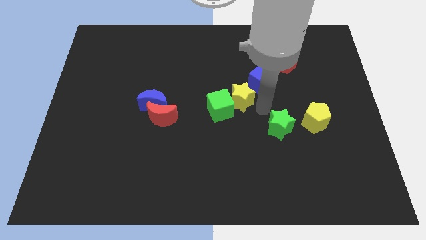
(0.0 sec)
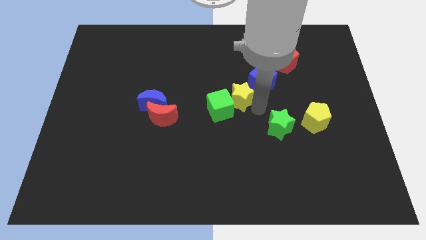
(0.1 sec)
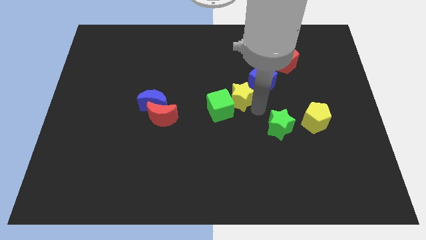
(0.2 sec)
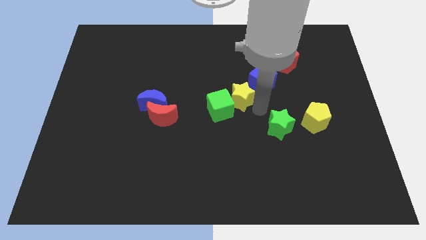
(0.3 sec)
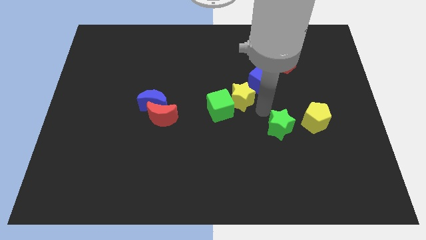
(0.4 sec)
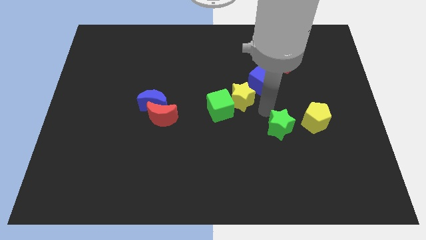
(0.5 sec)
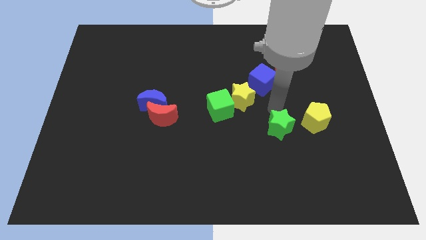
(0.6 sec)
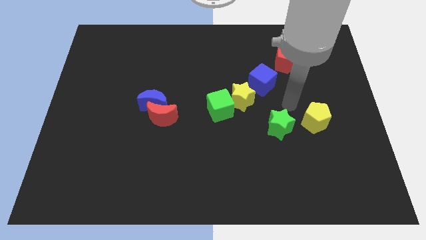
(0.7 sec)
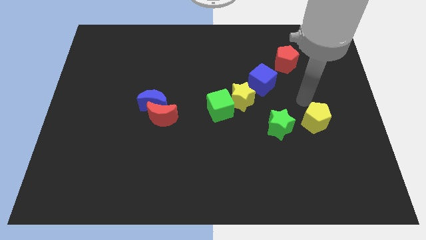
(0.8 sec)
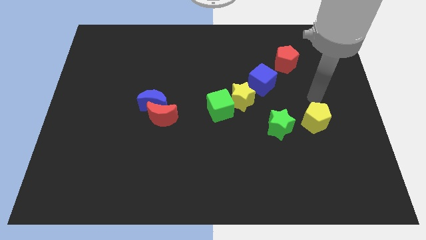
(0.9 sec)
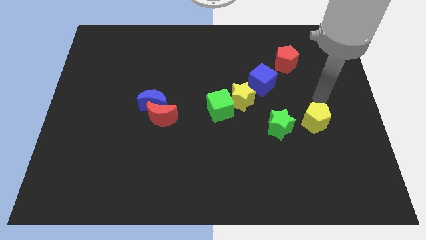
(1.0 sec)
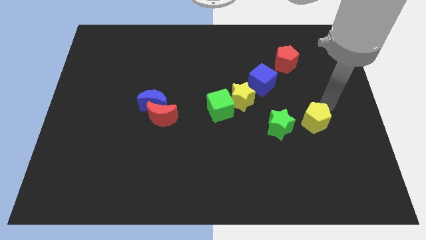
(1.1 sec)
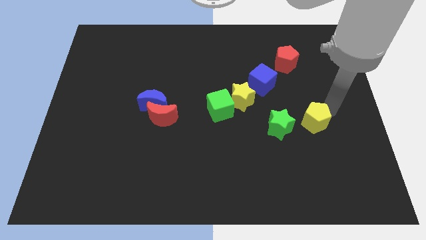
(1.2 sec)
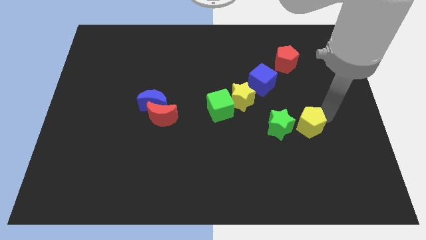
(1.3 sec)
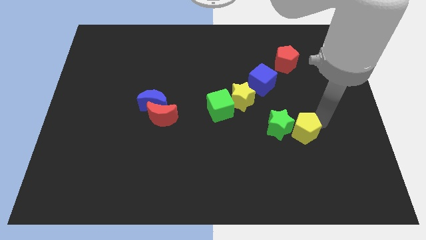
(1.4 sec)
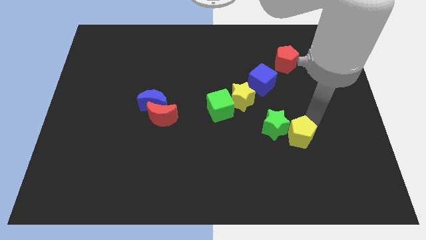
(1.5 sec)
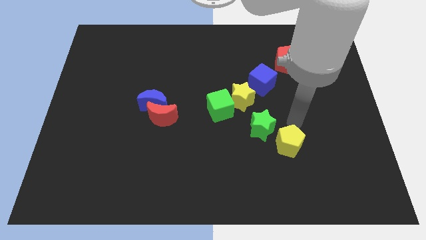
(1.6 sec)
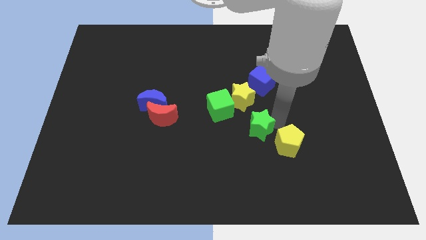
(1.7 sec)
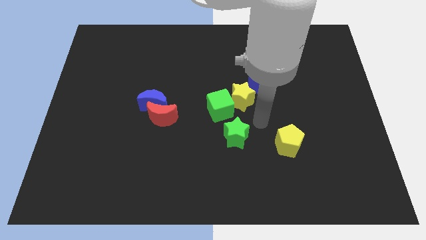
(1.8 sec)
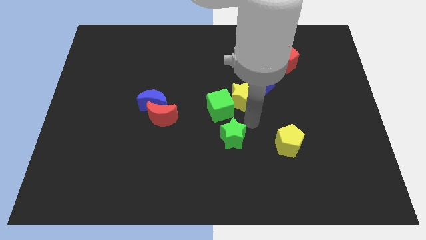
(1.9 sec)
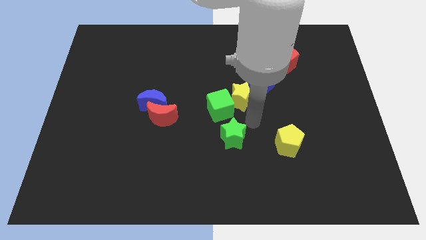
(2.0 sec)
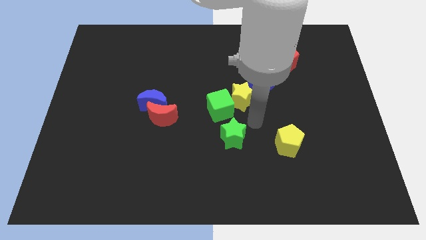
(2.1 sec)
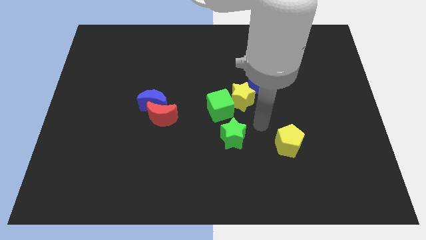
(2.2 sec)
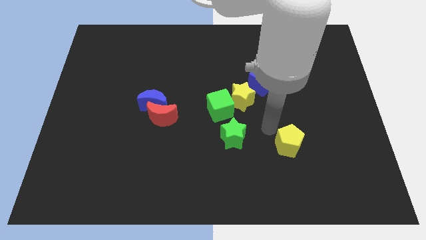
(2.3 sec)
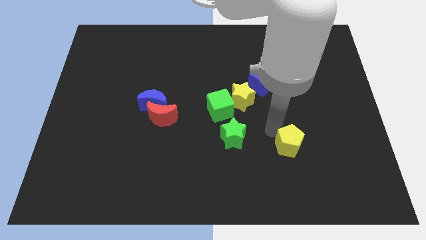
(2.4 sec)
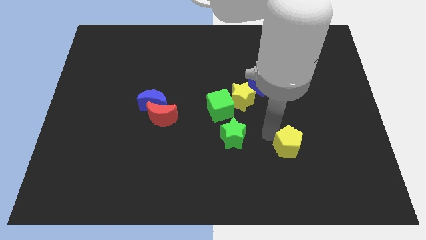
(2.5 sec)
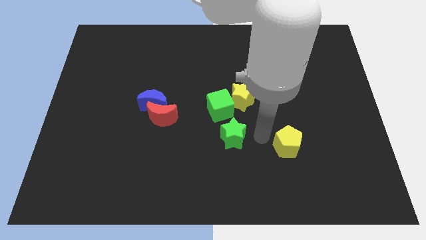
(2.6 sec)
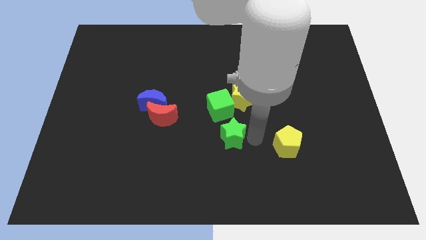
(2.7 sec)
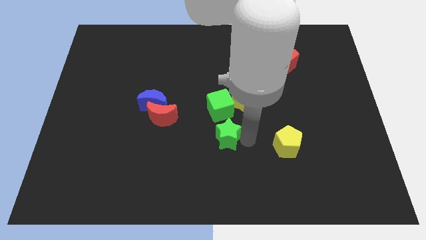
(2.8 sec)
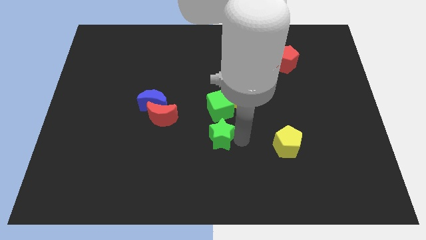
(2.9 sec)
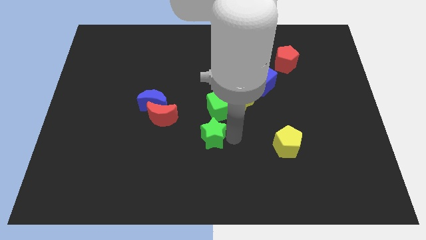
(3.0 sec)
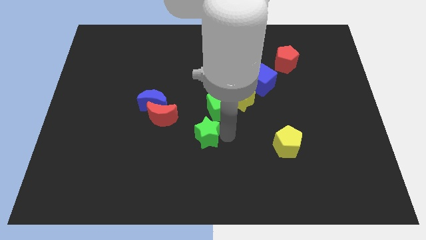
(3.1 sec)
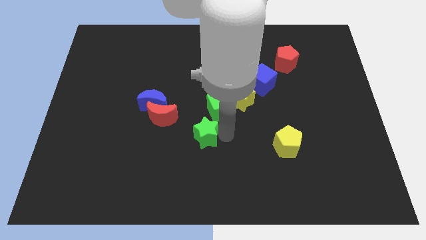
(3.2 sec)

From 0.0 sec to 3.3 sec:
move the green star below the green cube

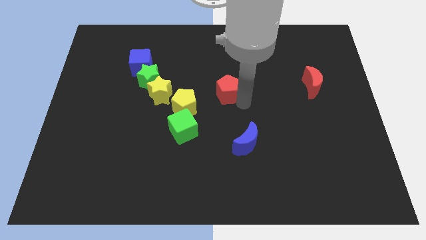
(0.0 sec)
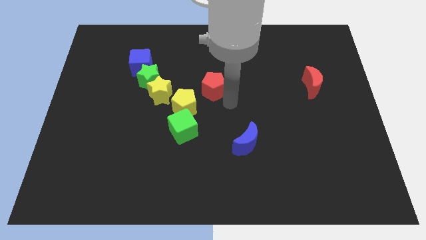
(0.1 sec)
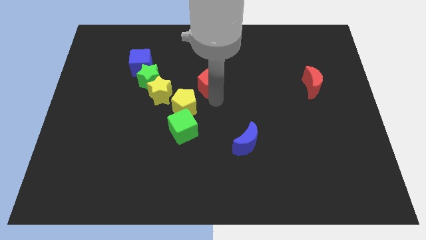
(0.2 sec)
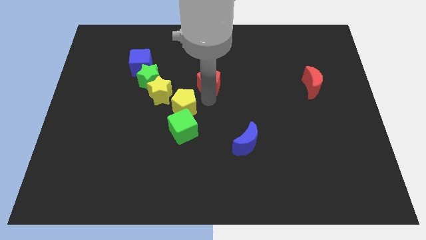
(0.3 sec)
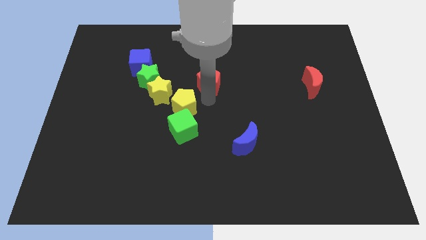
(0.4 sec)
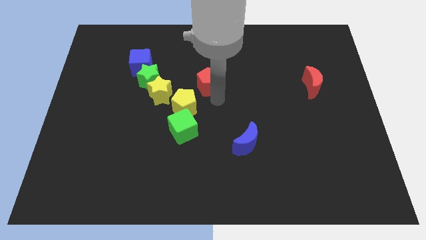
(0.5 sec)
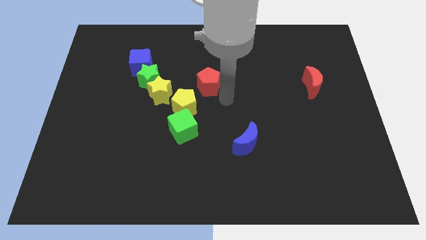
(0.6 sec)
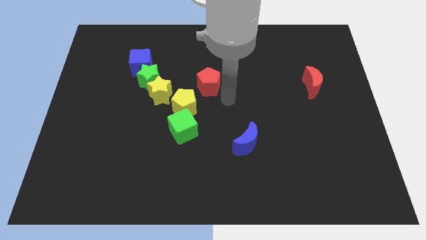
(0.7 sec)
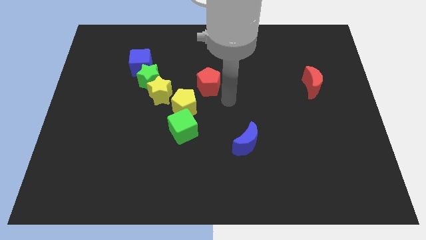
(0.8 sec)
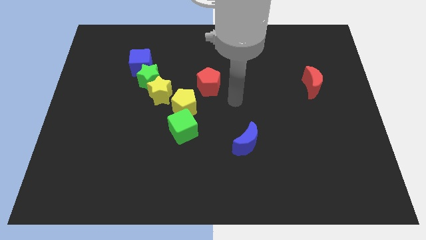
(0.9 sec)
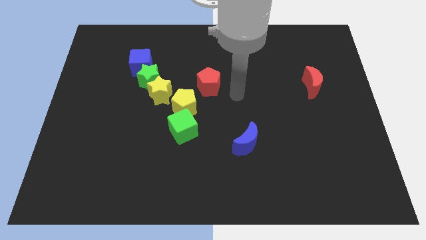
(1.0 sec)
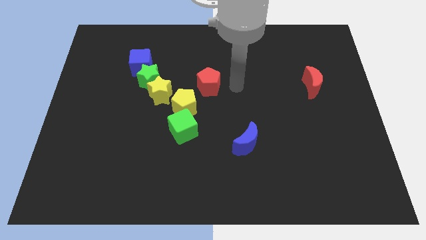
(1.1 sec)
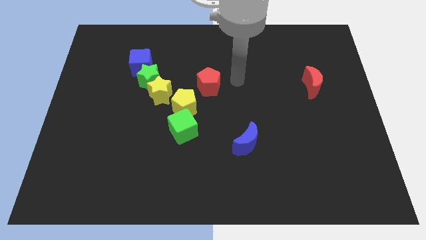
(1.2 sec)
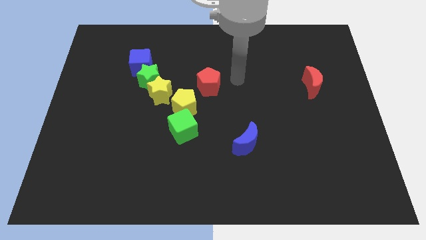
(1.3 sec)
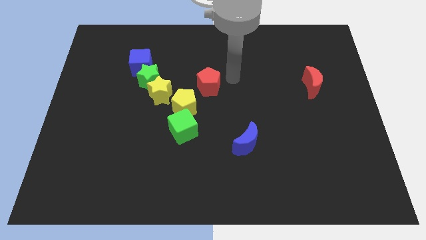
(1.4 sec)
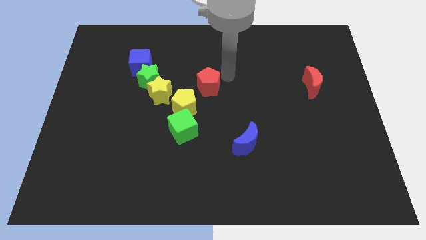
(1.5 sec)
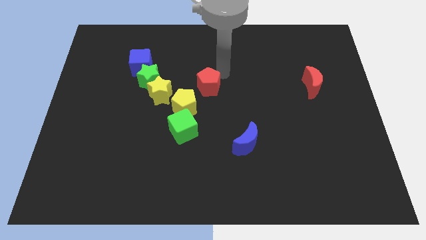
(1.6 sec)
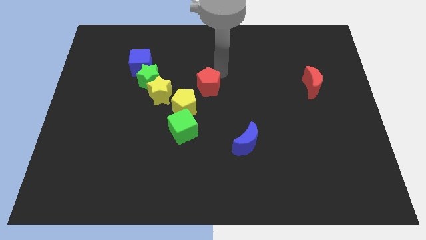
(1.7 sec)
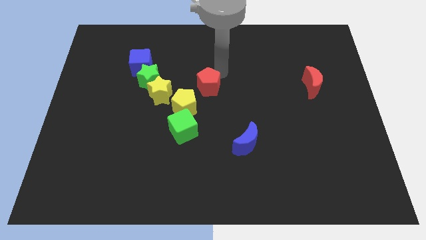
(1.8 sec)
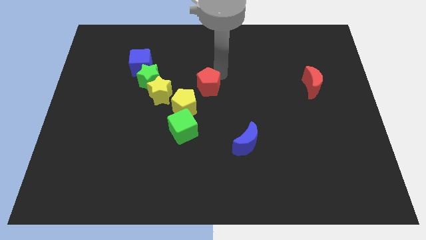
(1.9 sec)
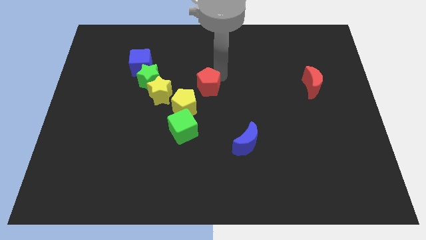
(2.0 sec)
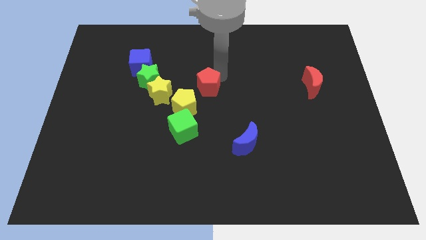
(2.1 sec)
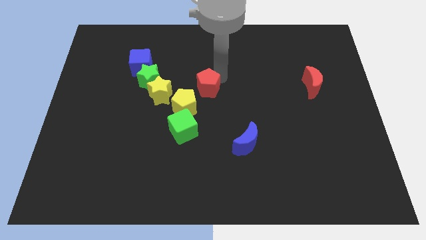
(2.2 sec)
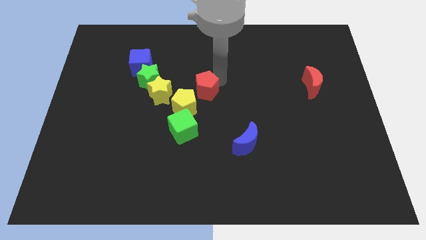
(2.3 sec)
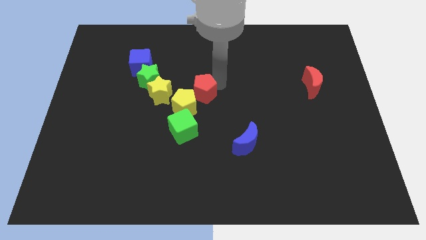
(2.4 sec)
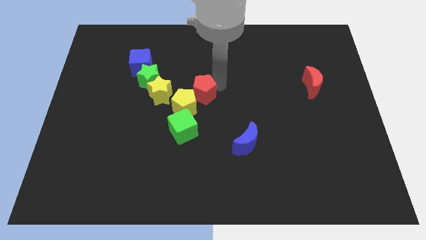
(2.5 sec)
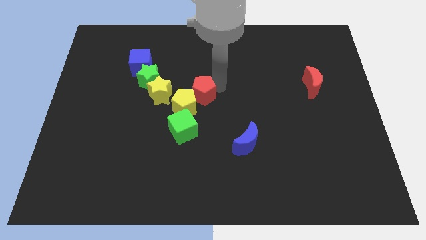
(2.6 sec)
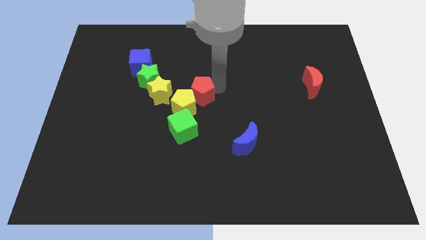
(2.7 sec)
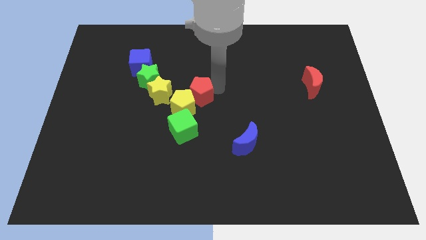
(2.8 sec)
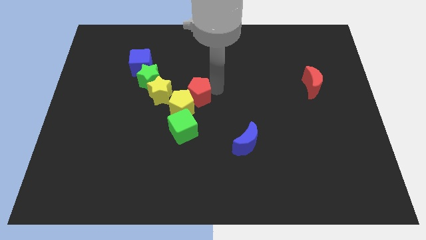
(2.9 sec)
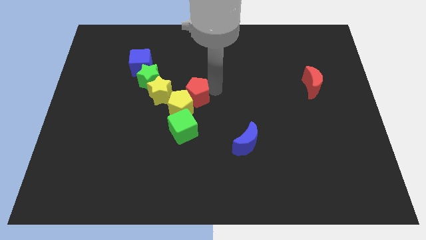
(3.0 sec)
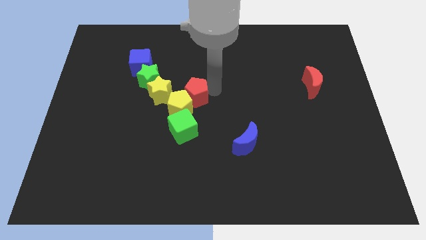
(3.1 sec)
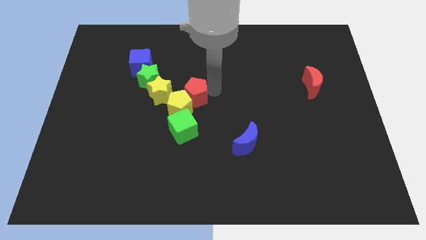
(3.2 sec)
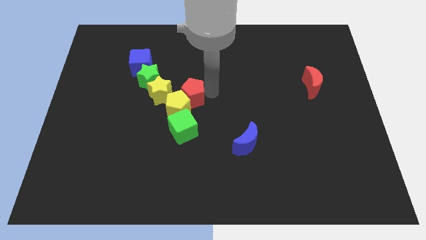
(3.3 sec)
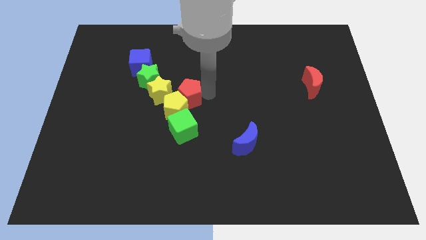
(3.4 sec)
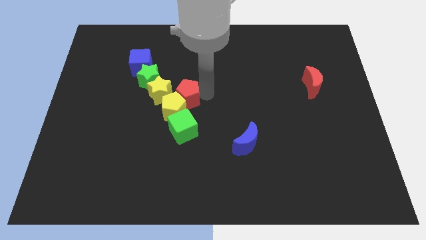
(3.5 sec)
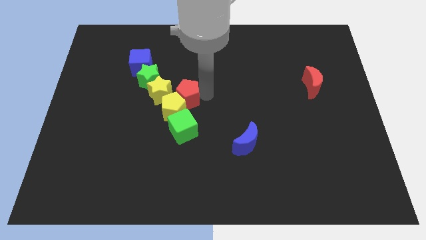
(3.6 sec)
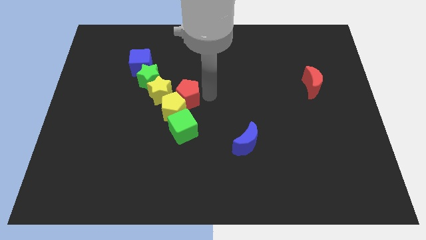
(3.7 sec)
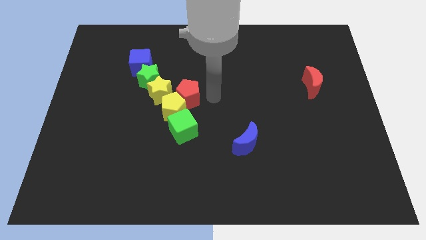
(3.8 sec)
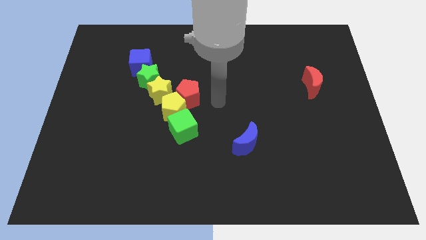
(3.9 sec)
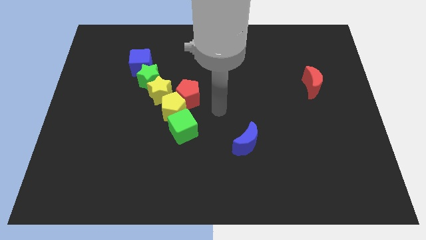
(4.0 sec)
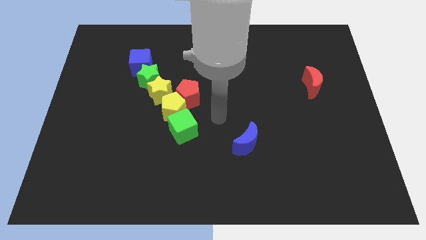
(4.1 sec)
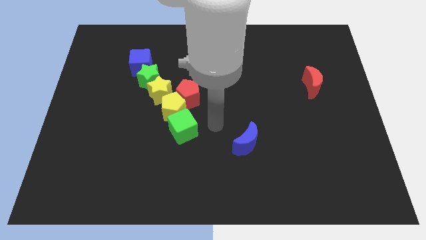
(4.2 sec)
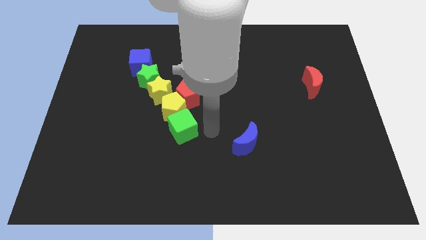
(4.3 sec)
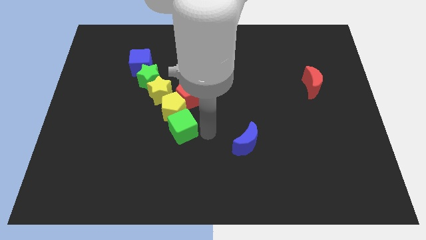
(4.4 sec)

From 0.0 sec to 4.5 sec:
push the red pentagon into the yellow pentagon

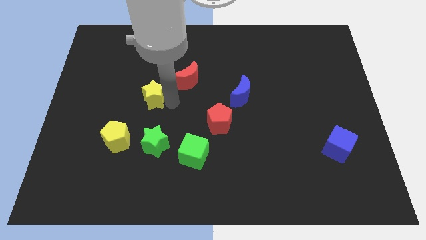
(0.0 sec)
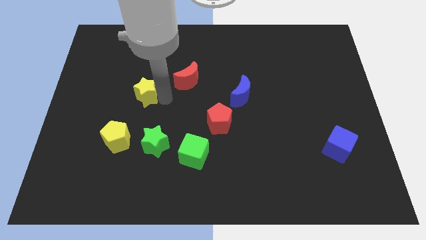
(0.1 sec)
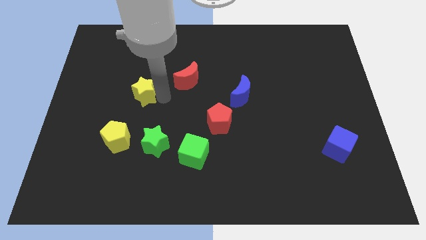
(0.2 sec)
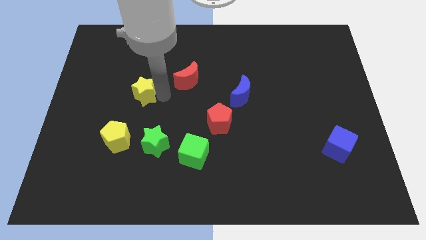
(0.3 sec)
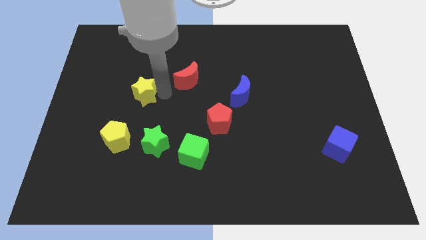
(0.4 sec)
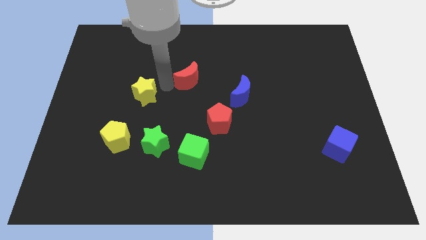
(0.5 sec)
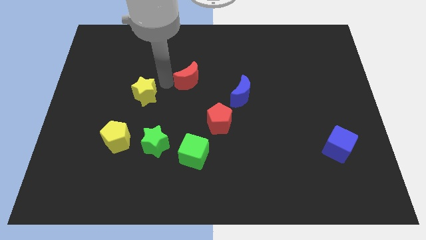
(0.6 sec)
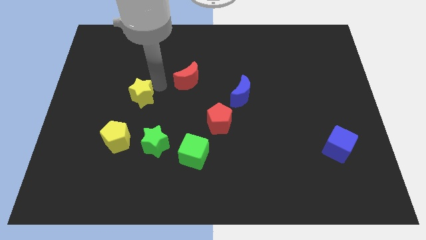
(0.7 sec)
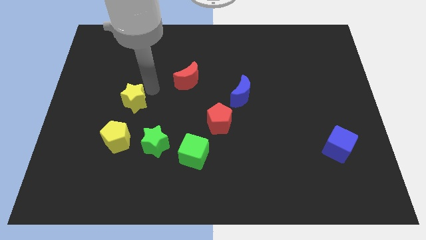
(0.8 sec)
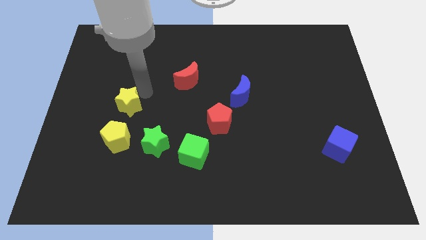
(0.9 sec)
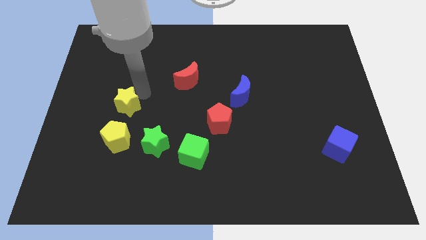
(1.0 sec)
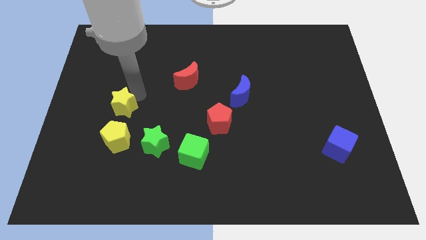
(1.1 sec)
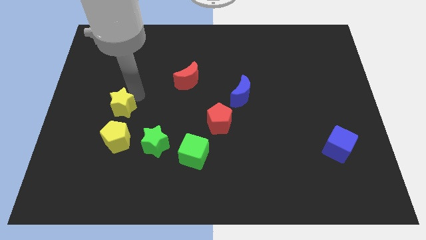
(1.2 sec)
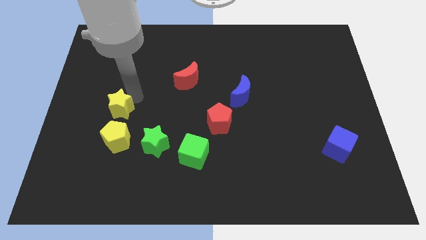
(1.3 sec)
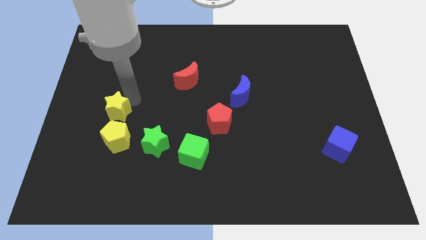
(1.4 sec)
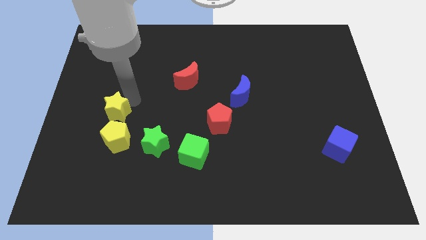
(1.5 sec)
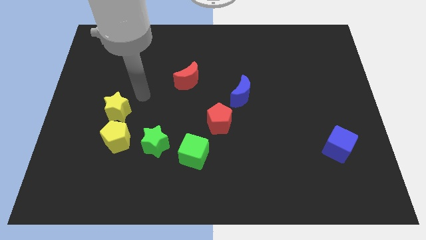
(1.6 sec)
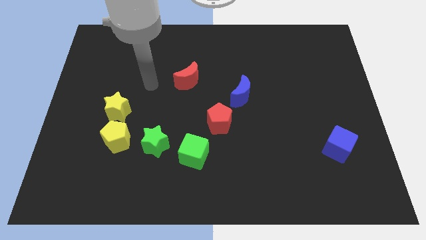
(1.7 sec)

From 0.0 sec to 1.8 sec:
place the yellow star on the top of the yellow pentagon
